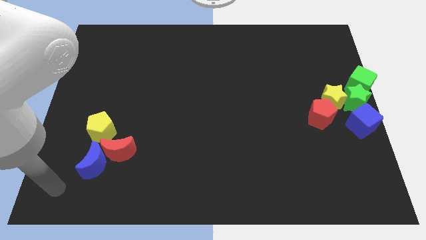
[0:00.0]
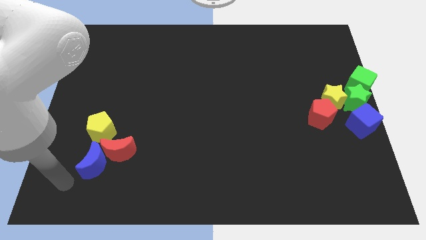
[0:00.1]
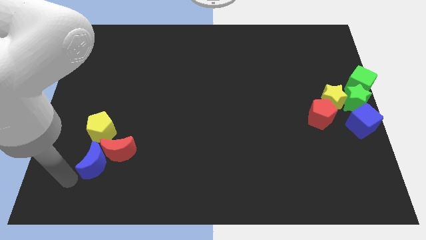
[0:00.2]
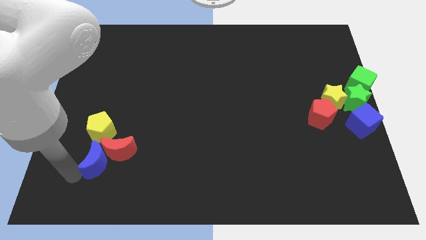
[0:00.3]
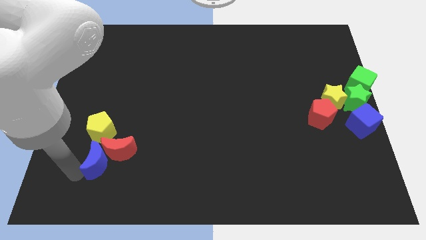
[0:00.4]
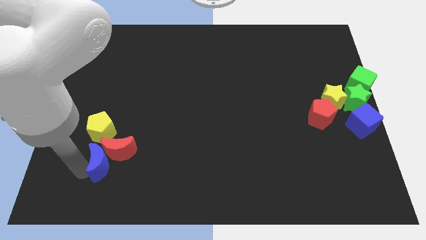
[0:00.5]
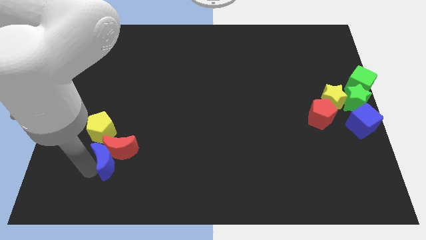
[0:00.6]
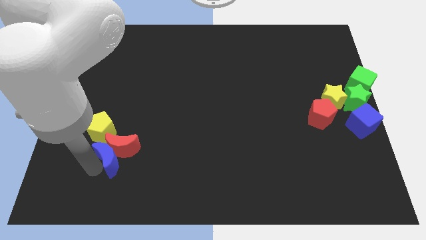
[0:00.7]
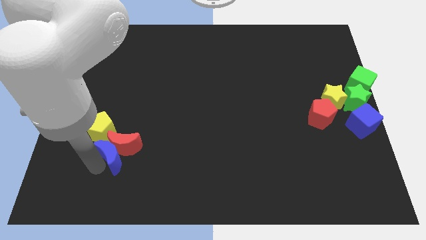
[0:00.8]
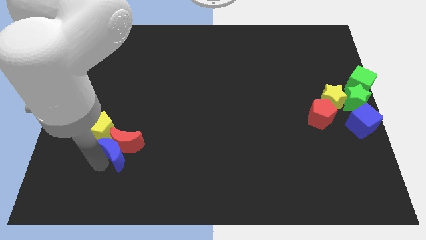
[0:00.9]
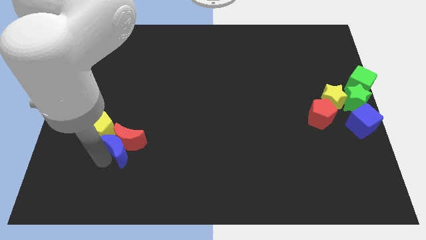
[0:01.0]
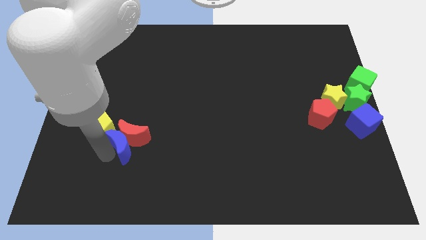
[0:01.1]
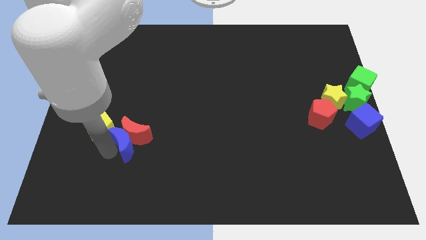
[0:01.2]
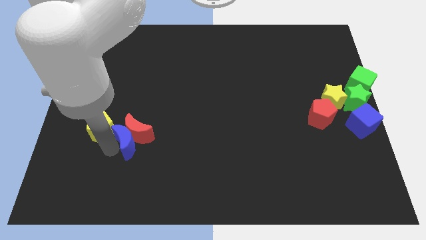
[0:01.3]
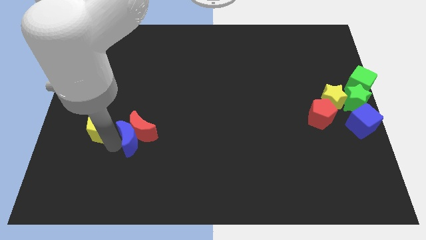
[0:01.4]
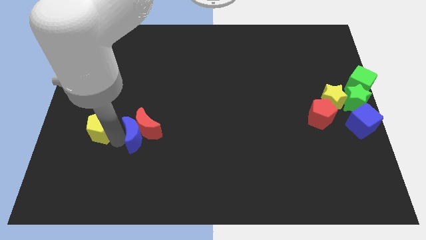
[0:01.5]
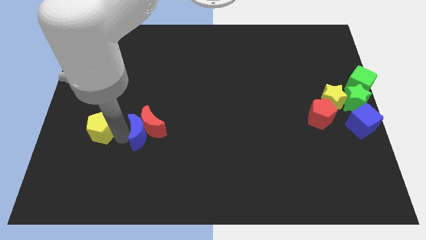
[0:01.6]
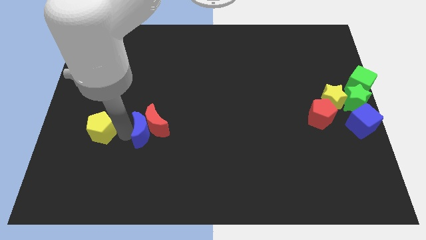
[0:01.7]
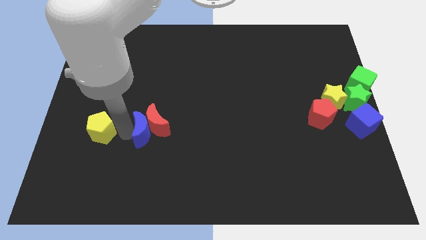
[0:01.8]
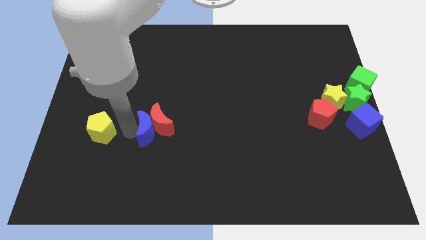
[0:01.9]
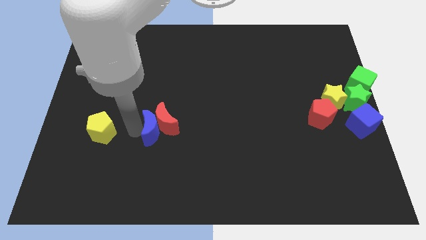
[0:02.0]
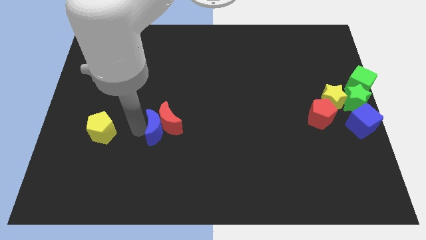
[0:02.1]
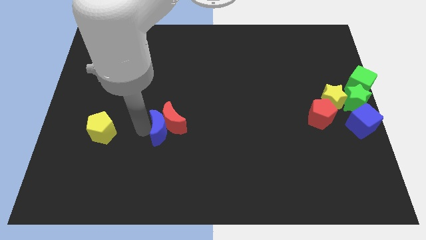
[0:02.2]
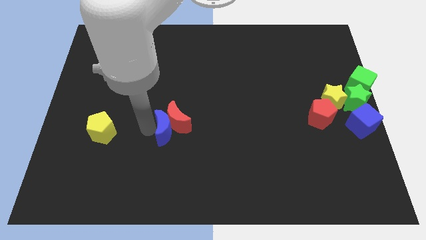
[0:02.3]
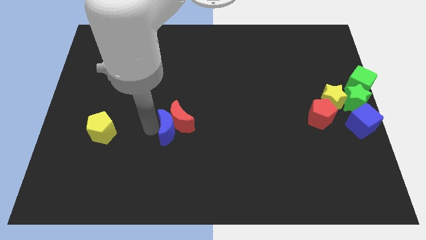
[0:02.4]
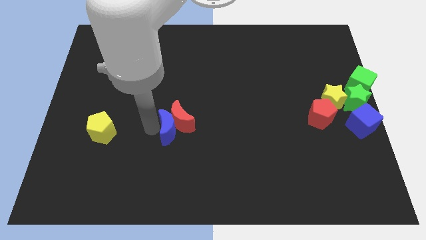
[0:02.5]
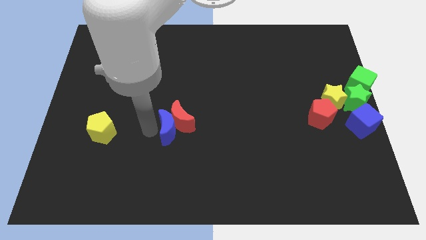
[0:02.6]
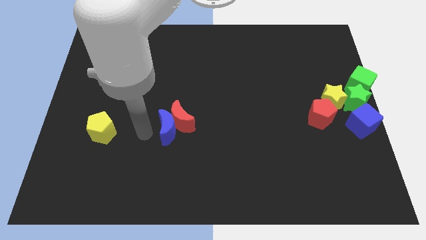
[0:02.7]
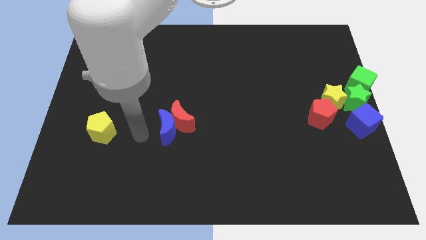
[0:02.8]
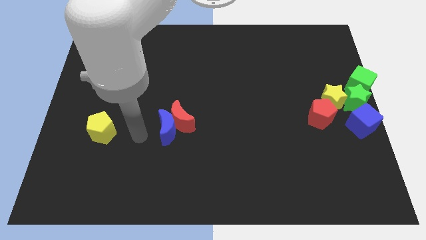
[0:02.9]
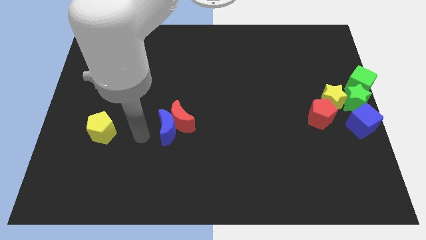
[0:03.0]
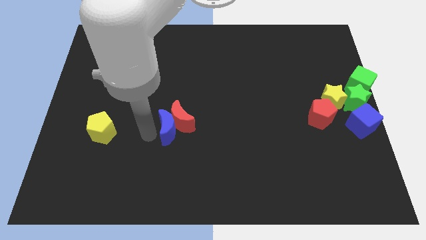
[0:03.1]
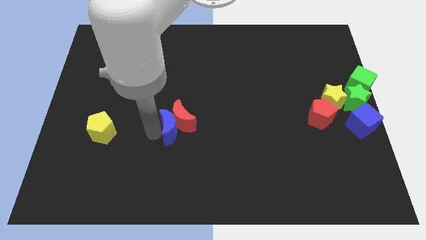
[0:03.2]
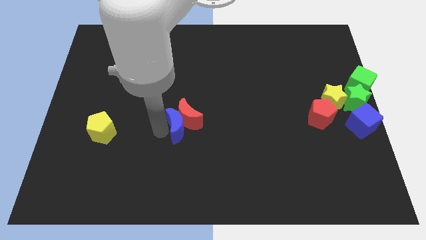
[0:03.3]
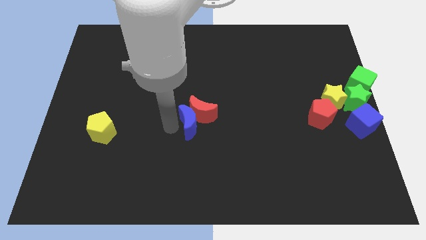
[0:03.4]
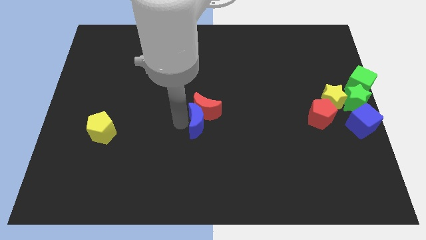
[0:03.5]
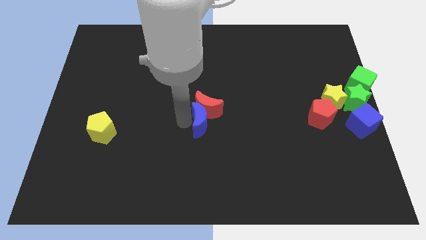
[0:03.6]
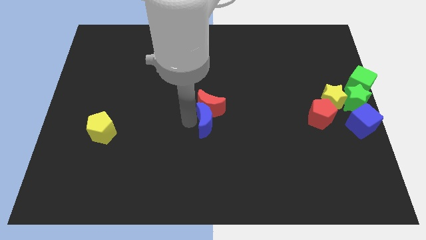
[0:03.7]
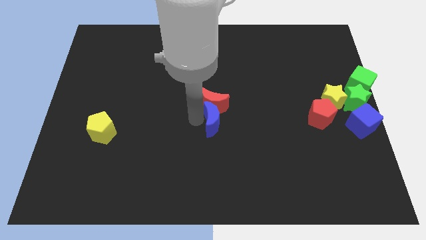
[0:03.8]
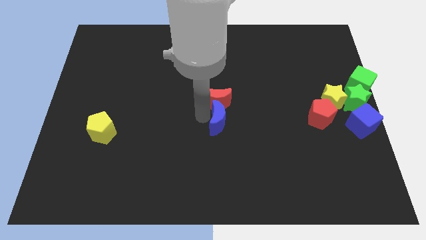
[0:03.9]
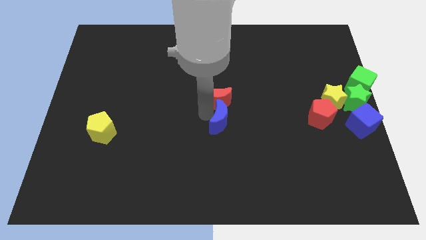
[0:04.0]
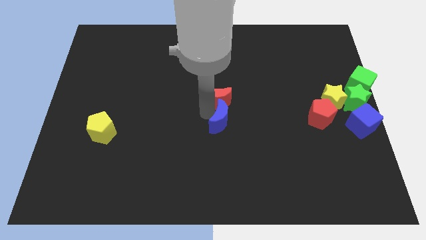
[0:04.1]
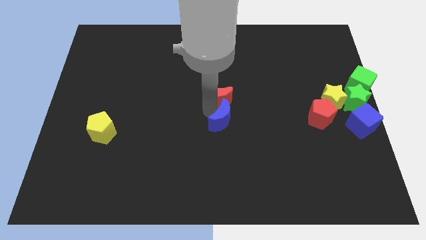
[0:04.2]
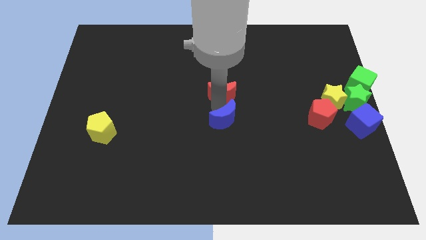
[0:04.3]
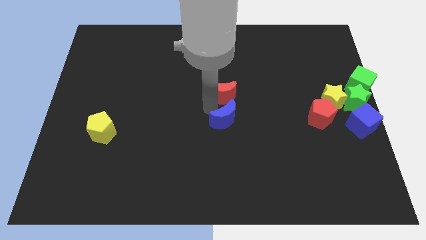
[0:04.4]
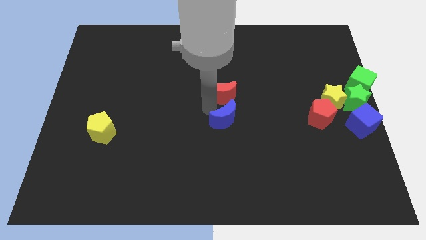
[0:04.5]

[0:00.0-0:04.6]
place the blue crescent at the center of the board

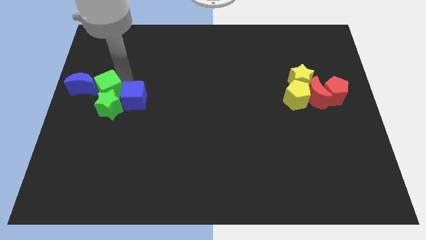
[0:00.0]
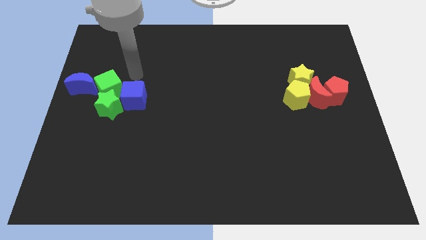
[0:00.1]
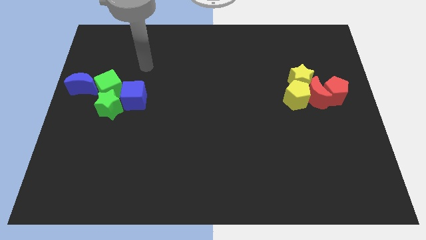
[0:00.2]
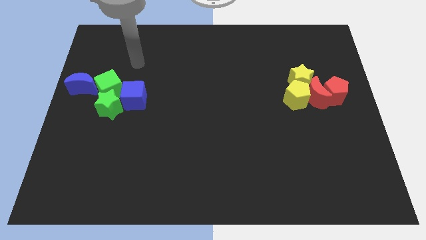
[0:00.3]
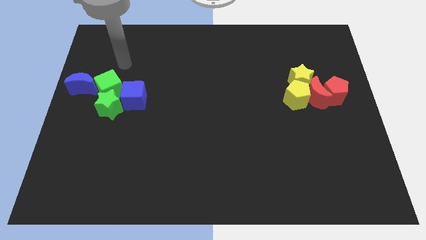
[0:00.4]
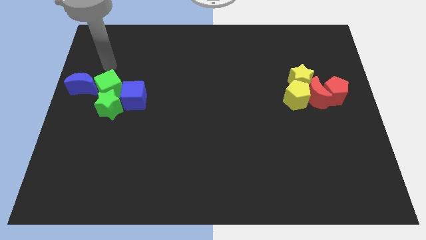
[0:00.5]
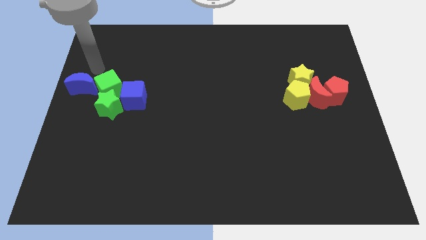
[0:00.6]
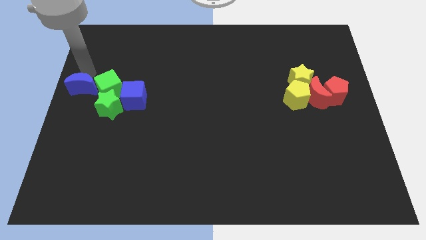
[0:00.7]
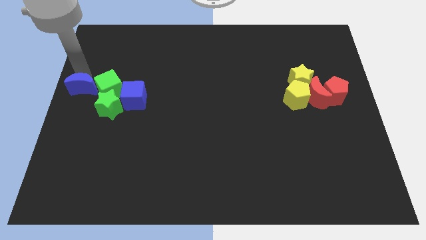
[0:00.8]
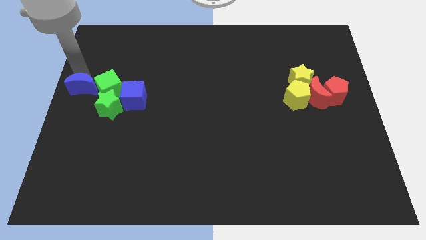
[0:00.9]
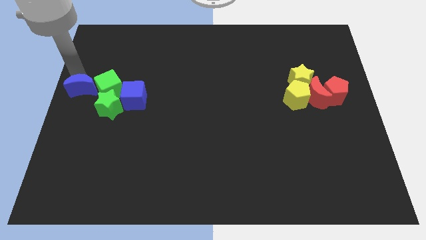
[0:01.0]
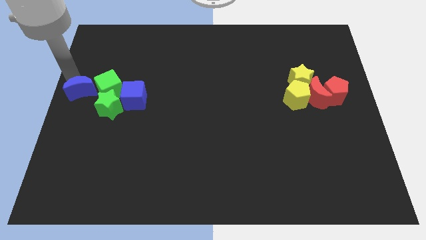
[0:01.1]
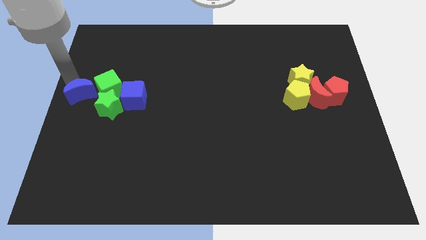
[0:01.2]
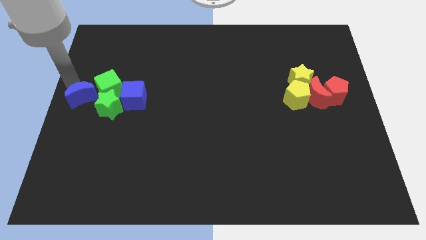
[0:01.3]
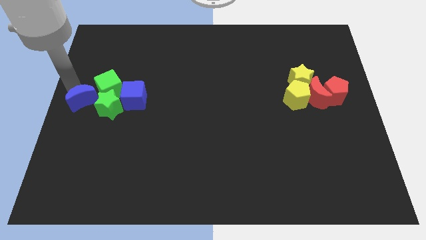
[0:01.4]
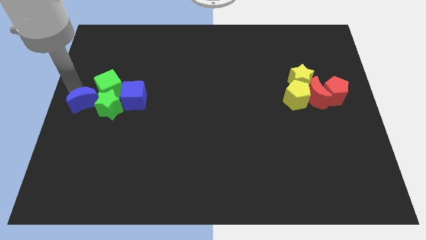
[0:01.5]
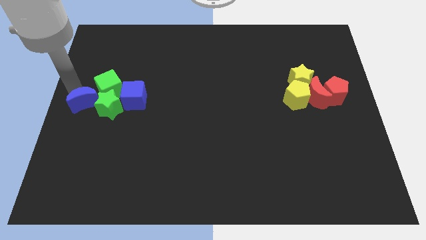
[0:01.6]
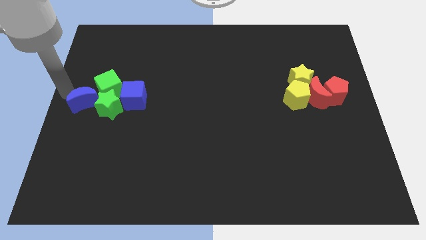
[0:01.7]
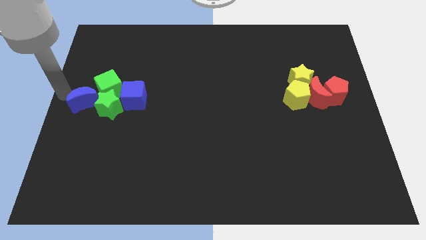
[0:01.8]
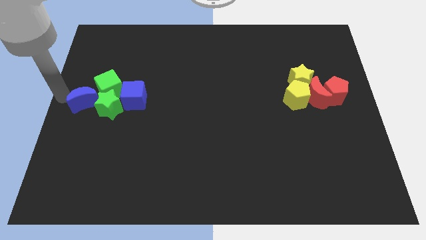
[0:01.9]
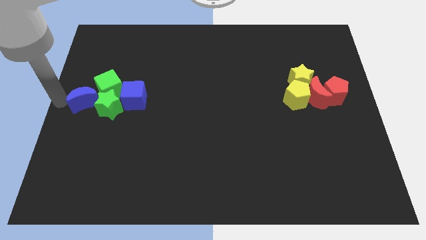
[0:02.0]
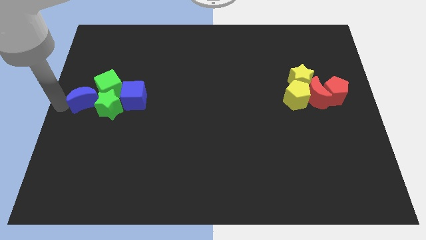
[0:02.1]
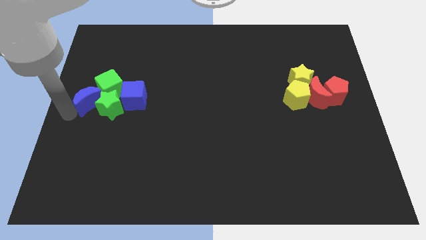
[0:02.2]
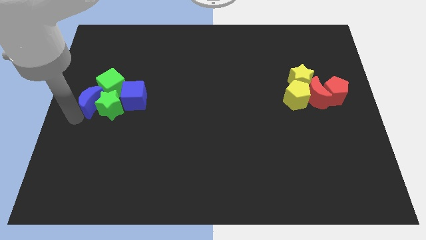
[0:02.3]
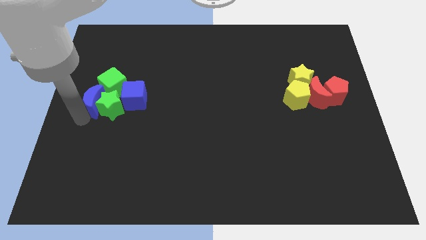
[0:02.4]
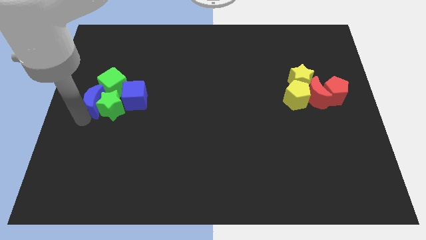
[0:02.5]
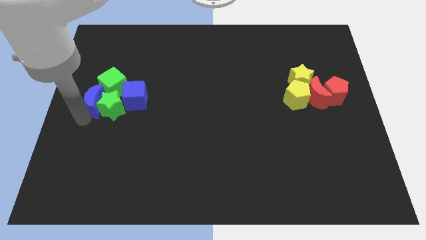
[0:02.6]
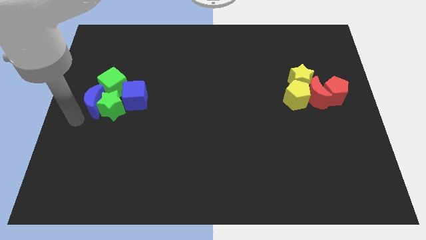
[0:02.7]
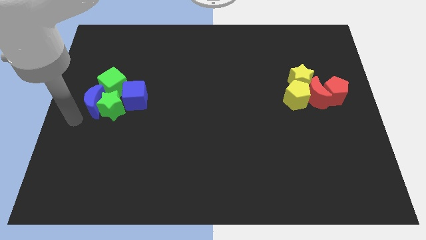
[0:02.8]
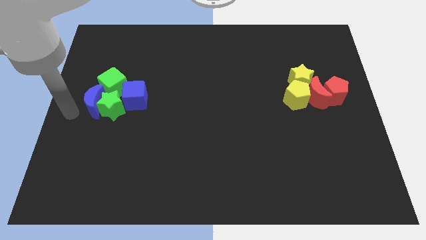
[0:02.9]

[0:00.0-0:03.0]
place blue crescent beside green star

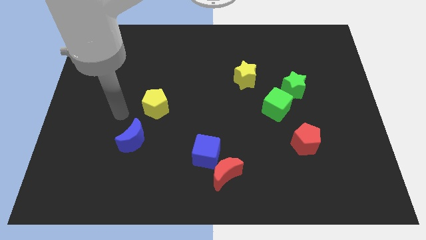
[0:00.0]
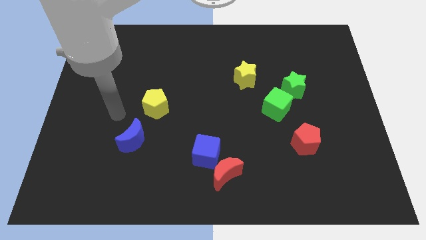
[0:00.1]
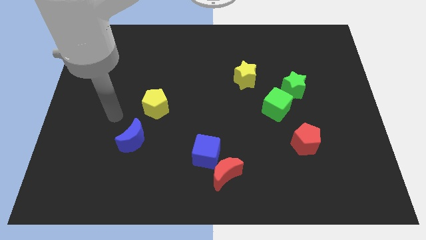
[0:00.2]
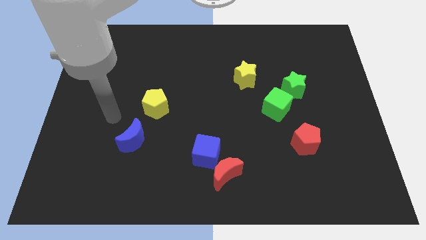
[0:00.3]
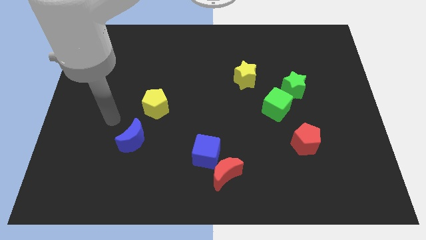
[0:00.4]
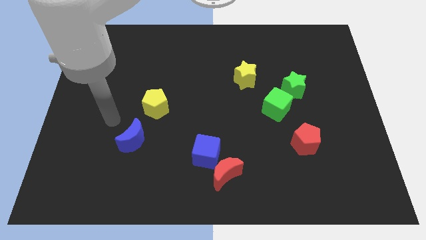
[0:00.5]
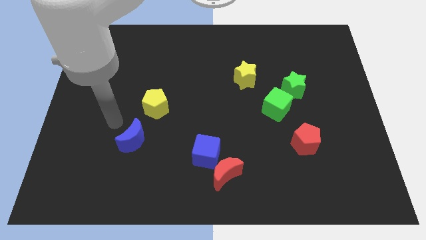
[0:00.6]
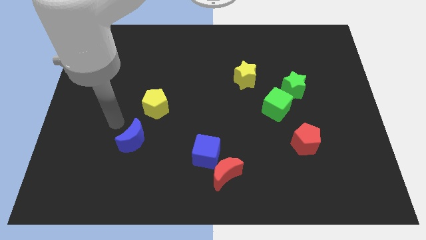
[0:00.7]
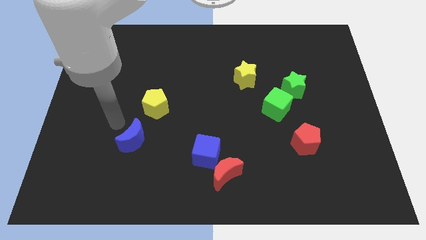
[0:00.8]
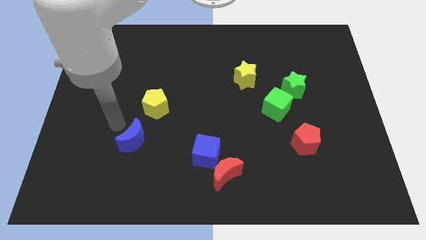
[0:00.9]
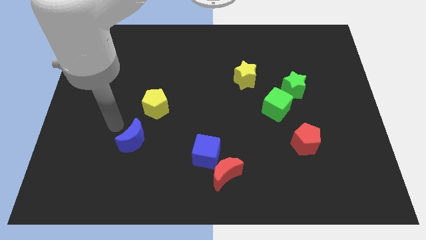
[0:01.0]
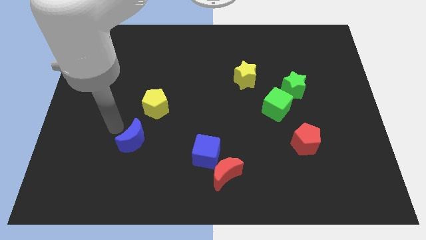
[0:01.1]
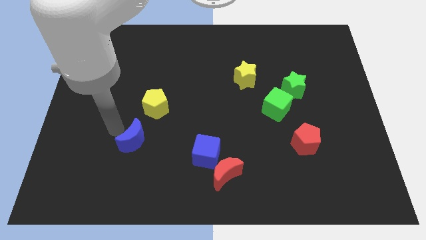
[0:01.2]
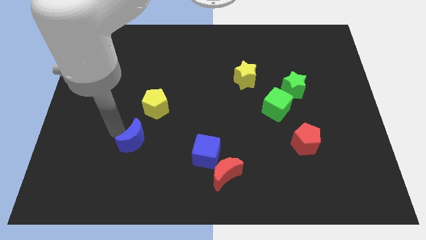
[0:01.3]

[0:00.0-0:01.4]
place arm on the right side of blue moon

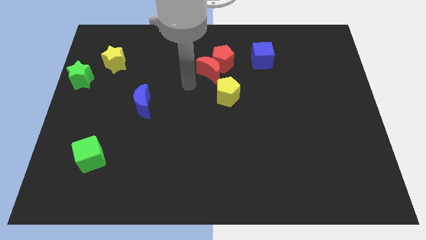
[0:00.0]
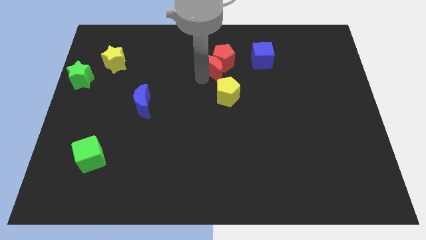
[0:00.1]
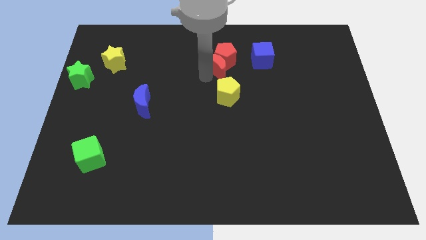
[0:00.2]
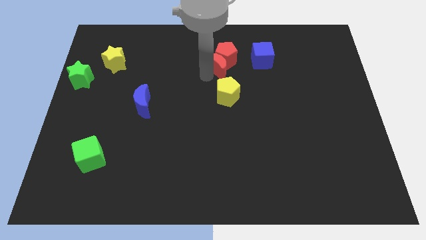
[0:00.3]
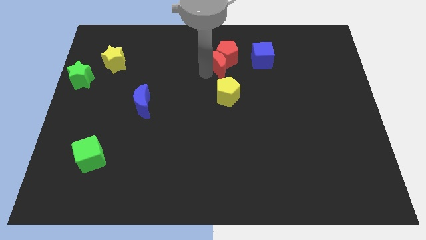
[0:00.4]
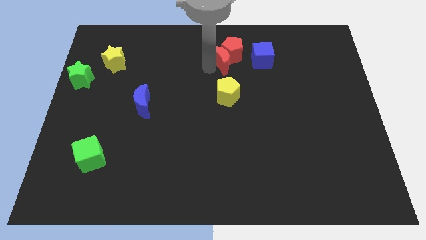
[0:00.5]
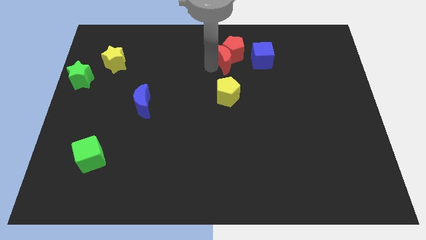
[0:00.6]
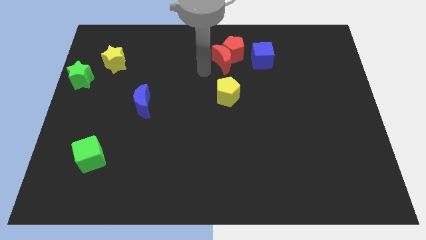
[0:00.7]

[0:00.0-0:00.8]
move the red crescent along with the red pentagon towards the top right of the board
